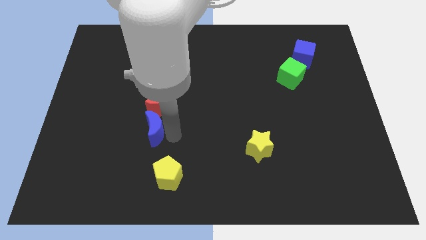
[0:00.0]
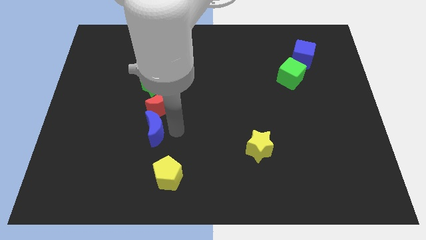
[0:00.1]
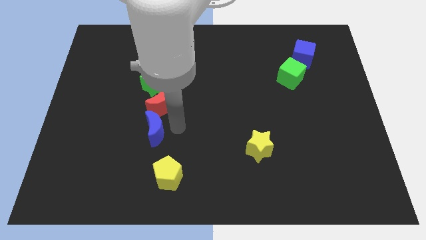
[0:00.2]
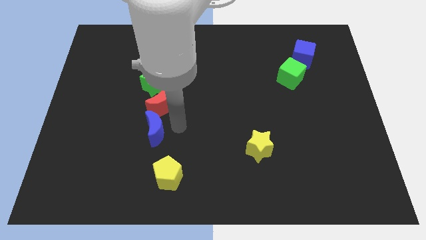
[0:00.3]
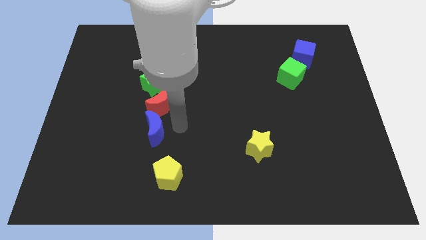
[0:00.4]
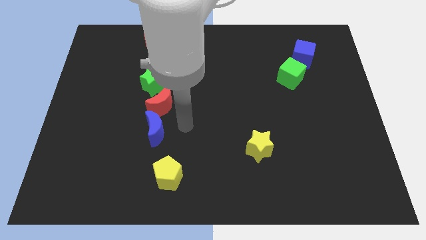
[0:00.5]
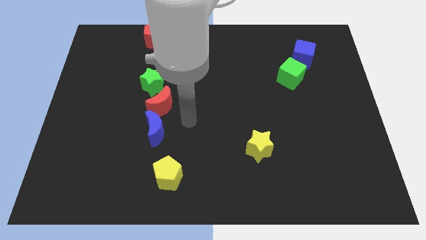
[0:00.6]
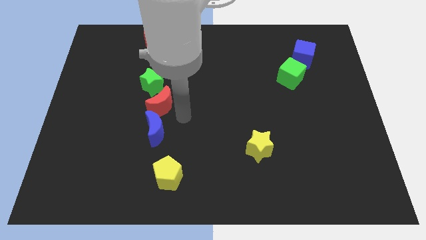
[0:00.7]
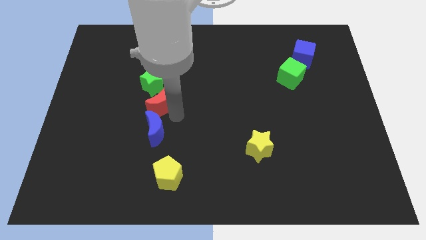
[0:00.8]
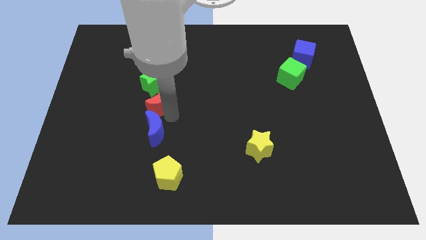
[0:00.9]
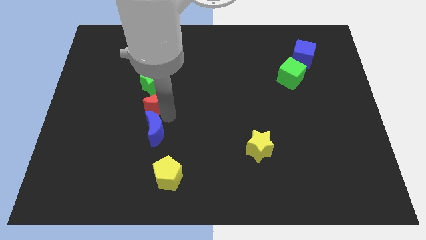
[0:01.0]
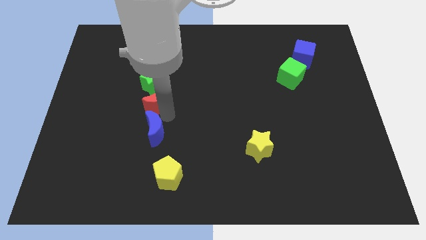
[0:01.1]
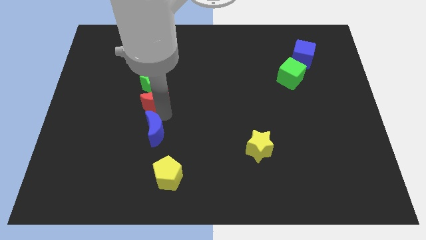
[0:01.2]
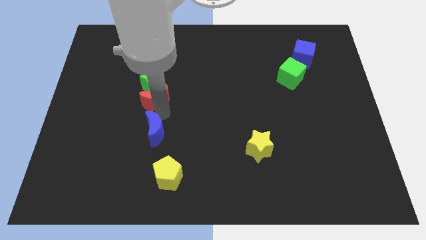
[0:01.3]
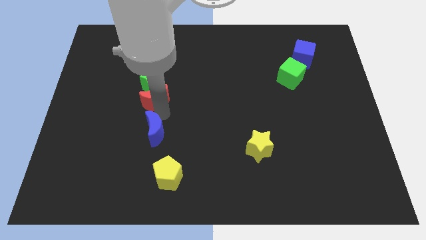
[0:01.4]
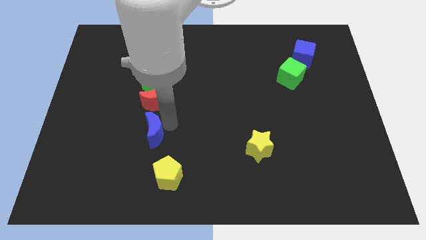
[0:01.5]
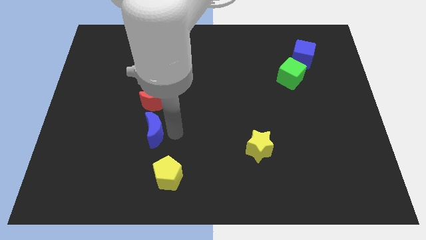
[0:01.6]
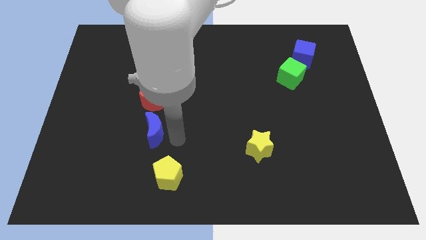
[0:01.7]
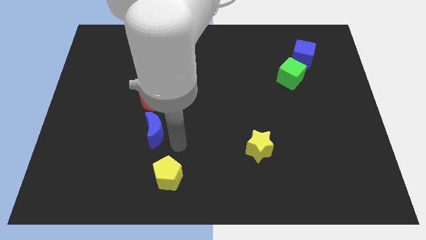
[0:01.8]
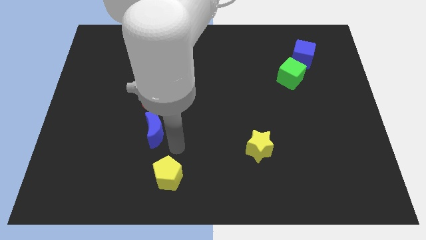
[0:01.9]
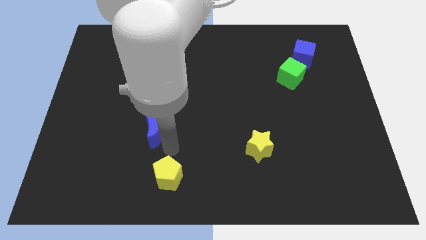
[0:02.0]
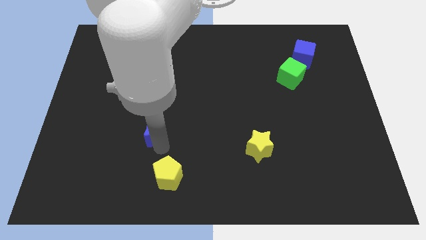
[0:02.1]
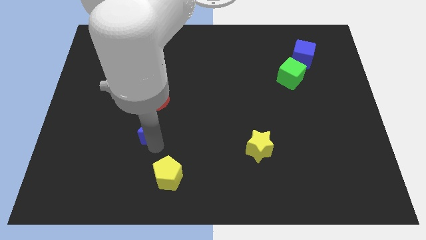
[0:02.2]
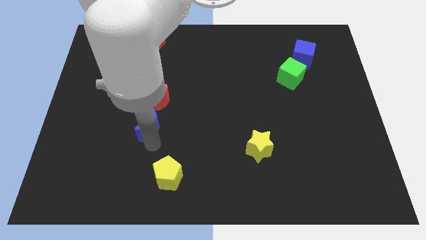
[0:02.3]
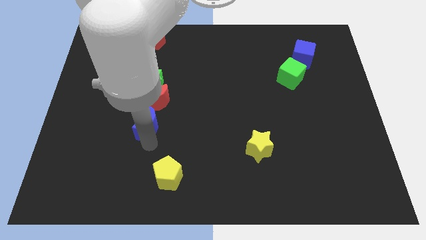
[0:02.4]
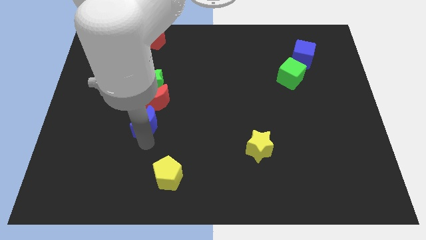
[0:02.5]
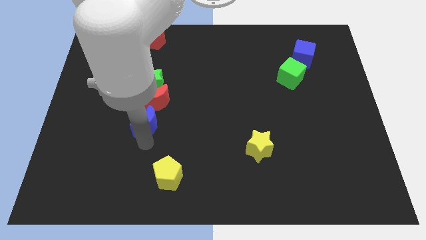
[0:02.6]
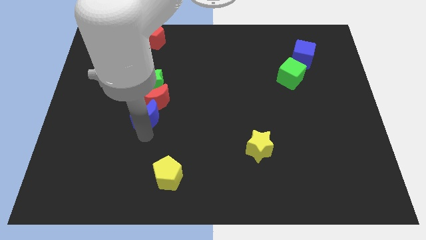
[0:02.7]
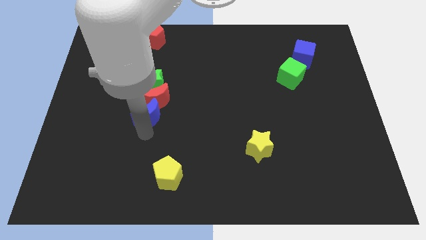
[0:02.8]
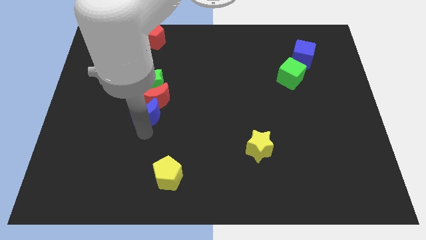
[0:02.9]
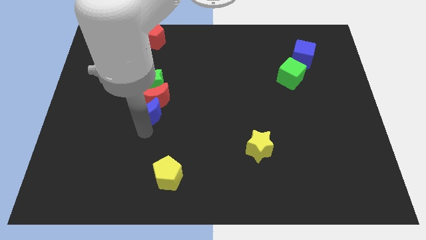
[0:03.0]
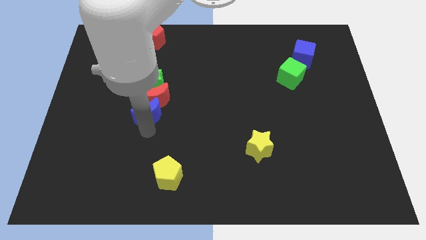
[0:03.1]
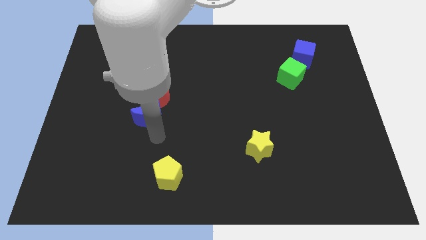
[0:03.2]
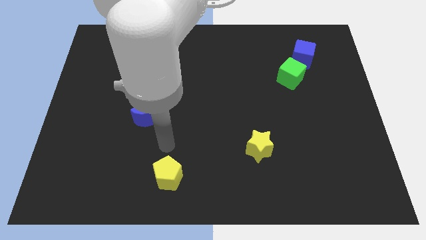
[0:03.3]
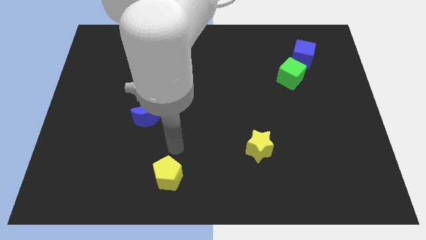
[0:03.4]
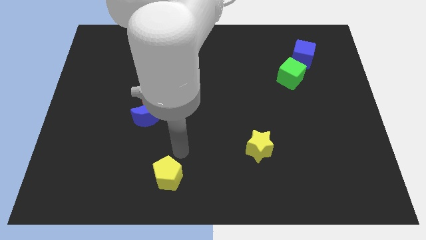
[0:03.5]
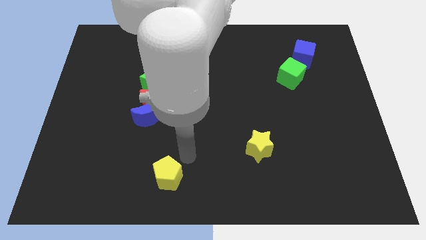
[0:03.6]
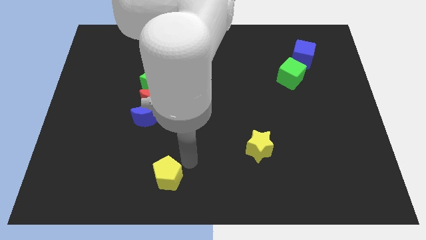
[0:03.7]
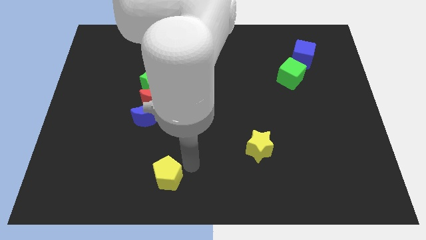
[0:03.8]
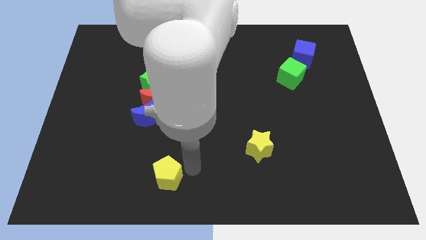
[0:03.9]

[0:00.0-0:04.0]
push the red and blue moon in to the green star

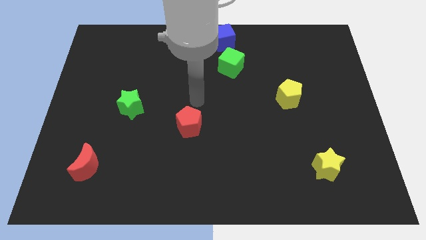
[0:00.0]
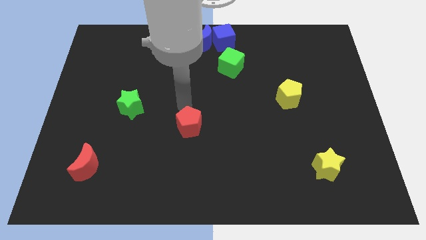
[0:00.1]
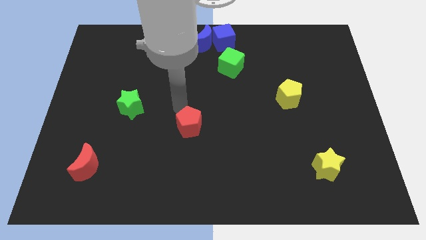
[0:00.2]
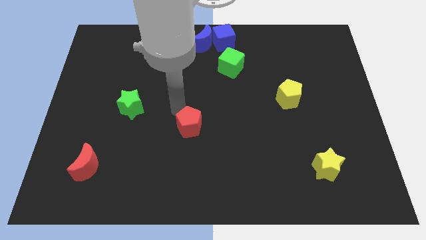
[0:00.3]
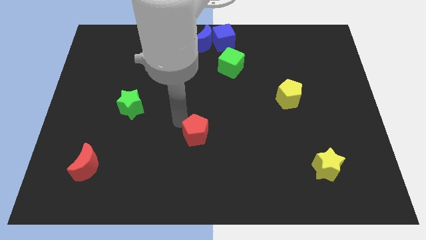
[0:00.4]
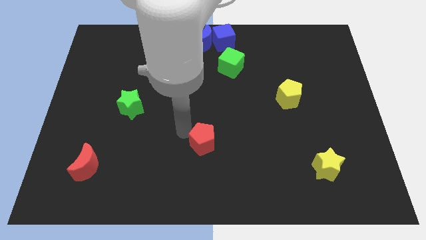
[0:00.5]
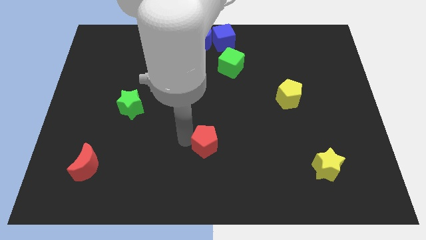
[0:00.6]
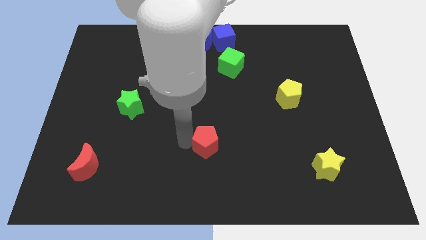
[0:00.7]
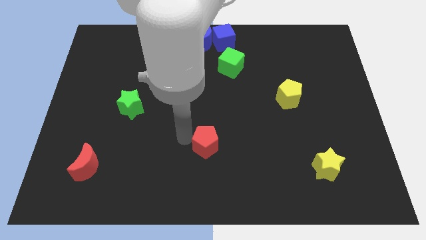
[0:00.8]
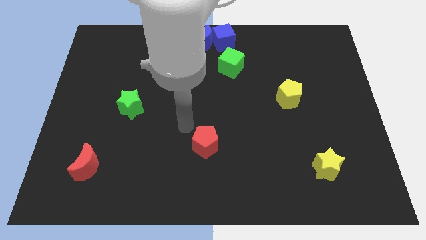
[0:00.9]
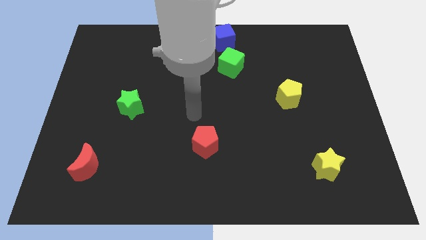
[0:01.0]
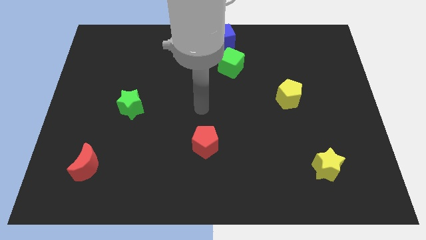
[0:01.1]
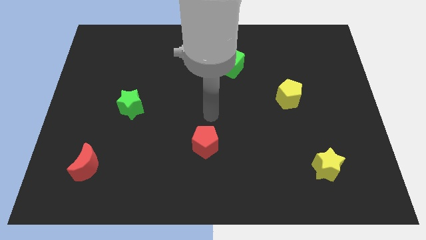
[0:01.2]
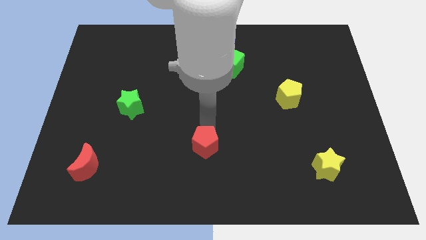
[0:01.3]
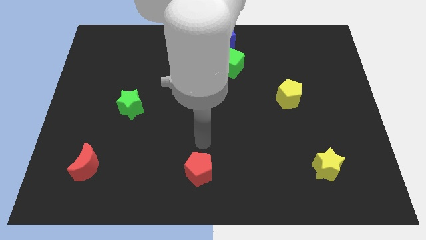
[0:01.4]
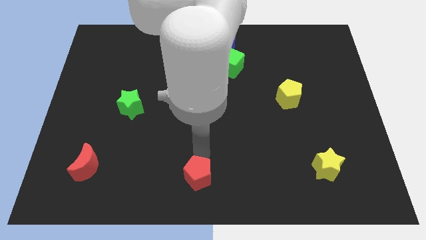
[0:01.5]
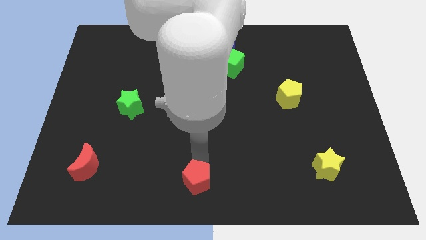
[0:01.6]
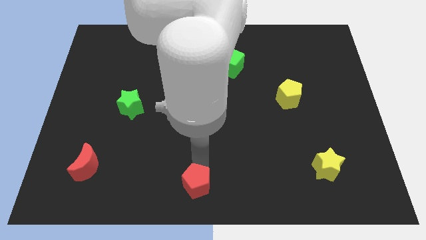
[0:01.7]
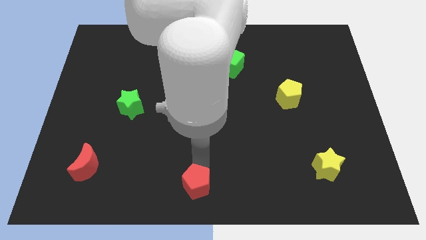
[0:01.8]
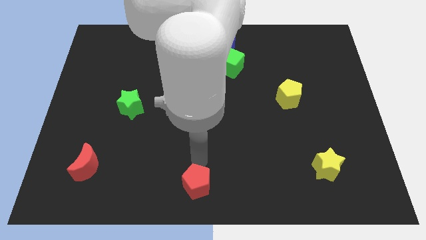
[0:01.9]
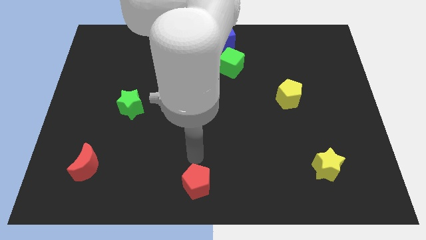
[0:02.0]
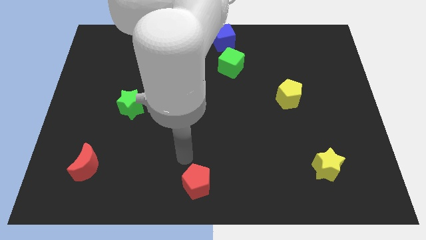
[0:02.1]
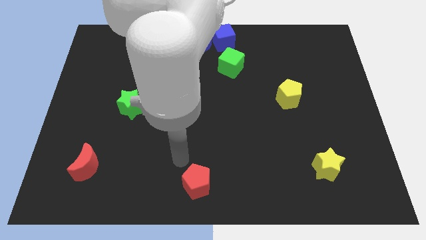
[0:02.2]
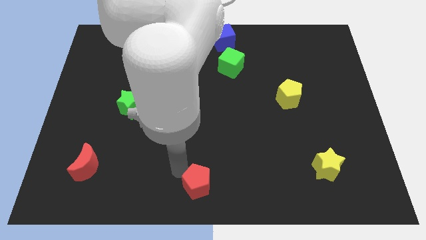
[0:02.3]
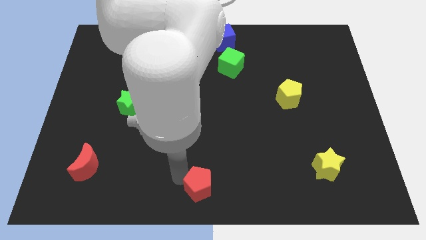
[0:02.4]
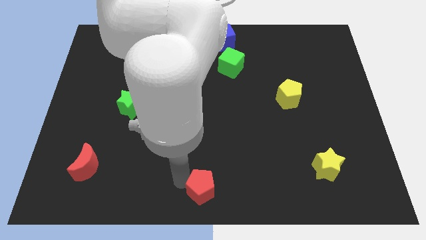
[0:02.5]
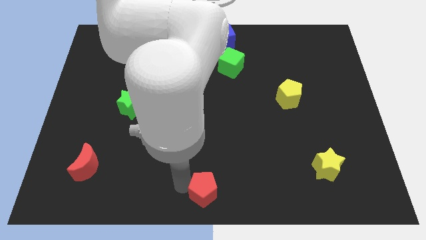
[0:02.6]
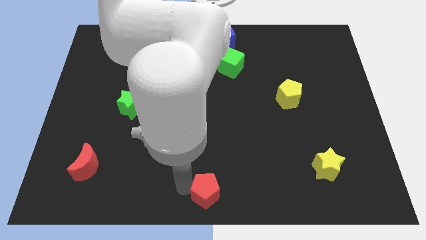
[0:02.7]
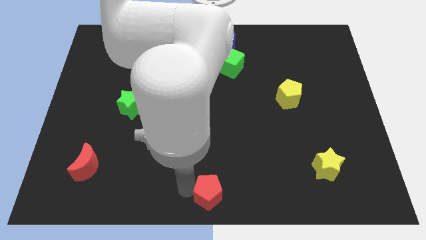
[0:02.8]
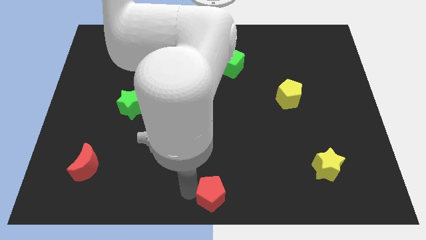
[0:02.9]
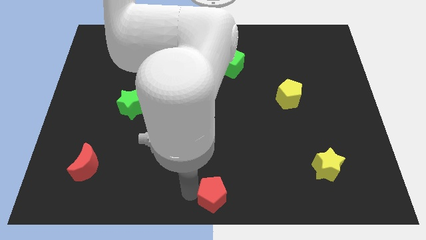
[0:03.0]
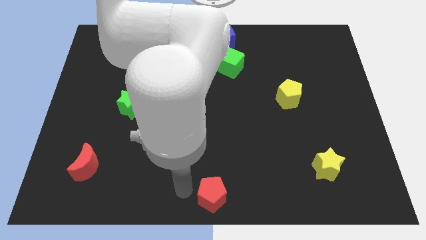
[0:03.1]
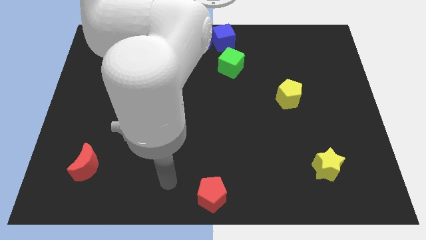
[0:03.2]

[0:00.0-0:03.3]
move the red pentagon to the bottom center

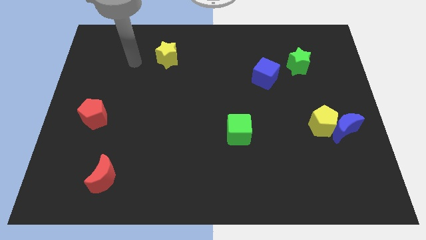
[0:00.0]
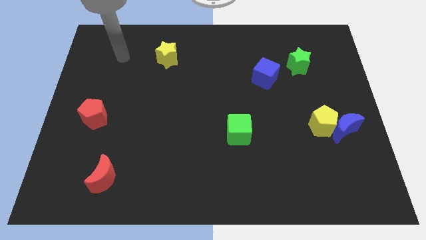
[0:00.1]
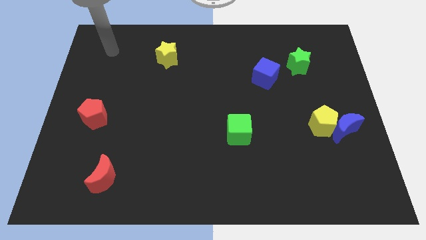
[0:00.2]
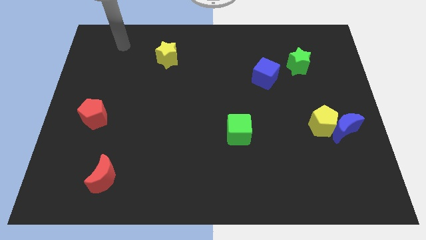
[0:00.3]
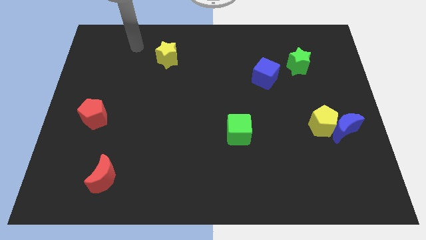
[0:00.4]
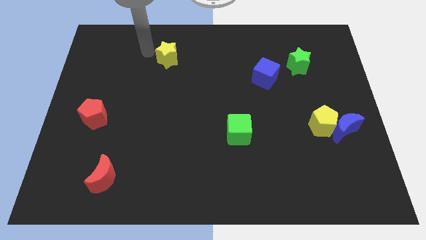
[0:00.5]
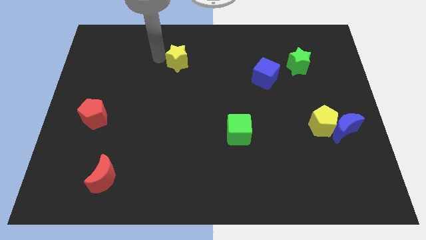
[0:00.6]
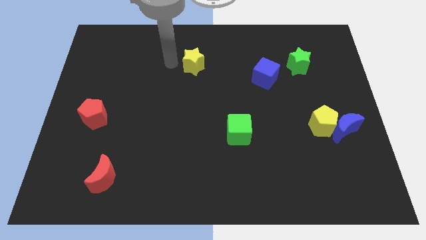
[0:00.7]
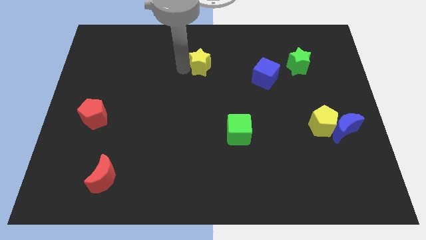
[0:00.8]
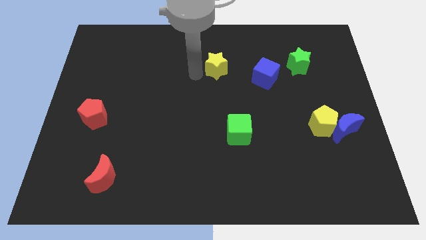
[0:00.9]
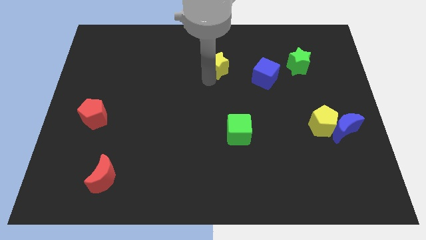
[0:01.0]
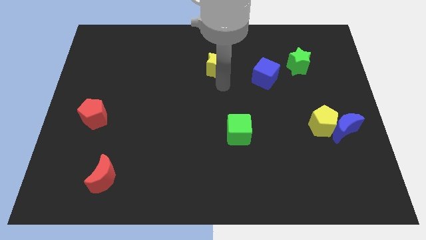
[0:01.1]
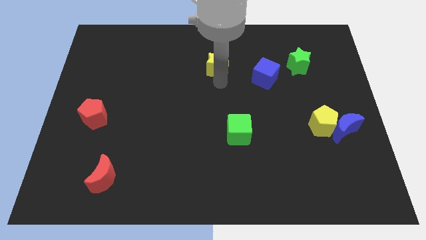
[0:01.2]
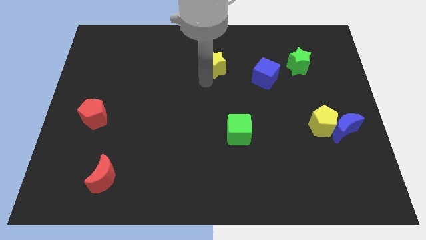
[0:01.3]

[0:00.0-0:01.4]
place the yellow star to the left of the blue cube

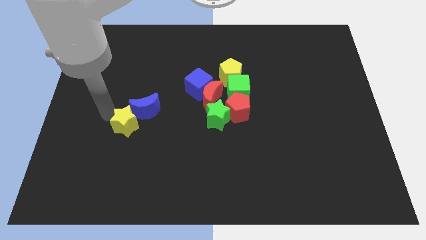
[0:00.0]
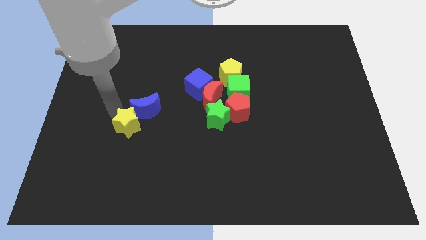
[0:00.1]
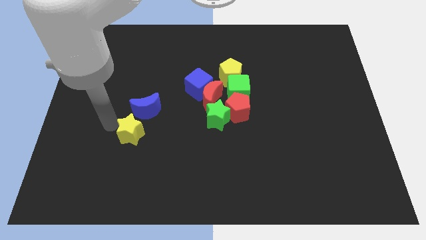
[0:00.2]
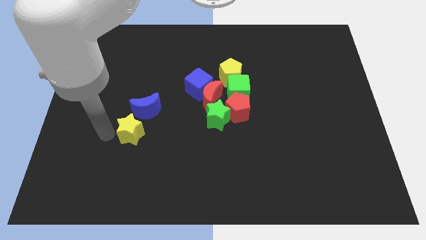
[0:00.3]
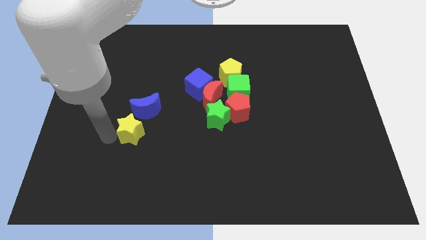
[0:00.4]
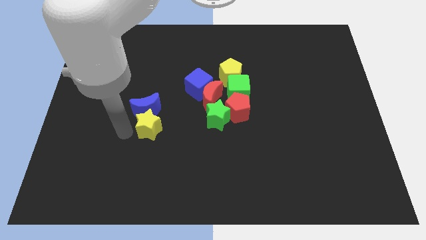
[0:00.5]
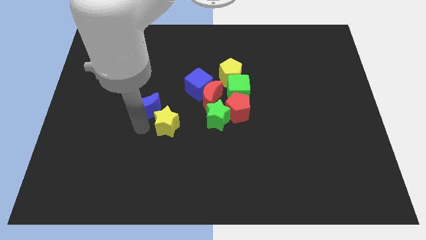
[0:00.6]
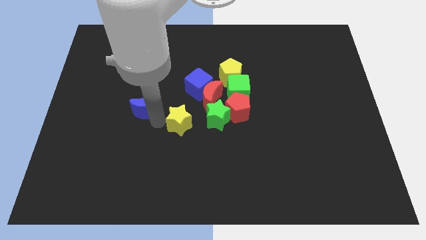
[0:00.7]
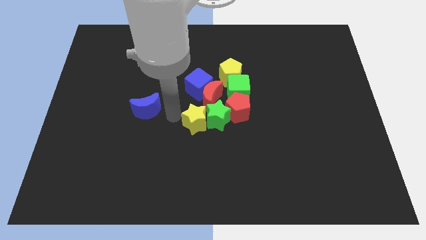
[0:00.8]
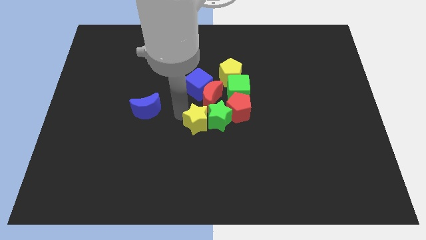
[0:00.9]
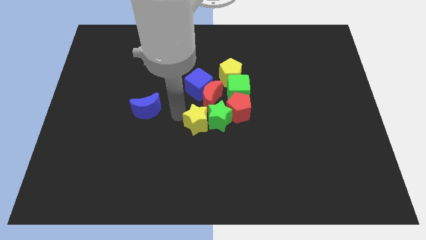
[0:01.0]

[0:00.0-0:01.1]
drag yellow star towards green star
